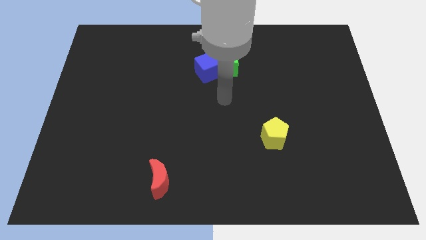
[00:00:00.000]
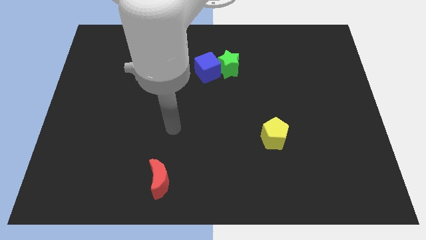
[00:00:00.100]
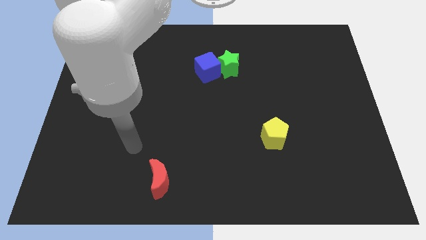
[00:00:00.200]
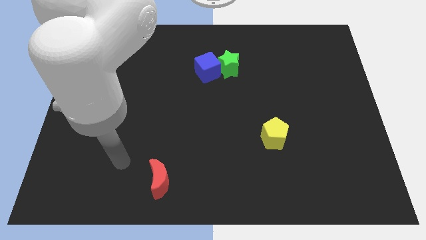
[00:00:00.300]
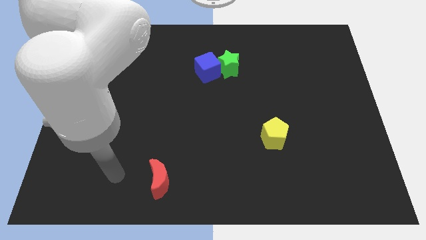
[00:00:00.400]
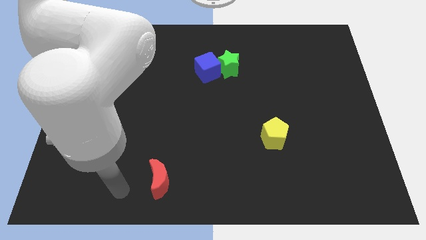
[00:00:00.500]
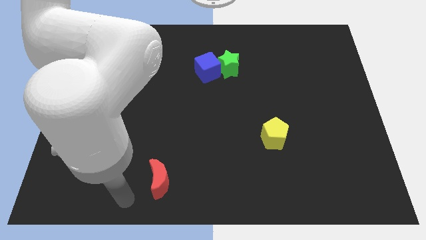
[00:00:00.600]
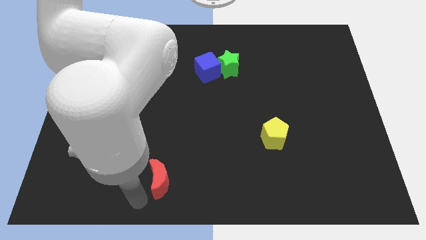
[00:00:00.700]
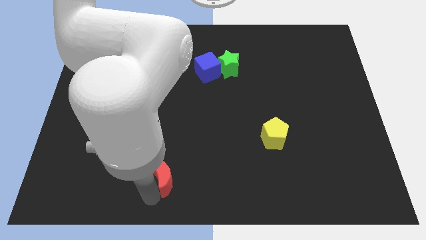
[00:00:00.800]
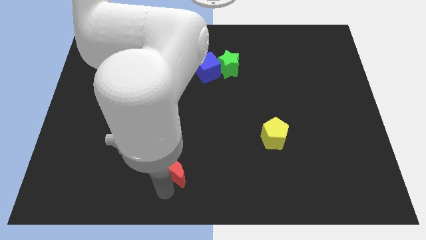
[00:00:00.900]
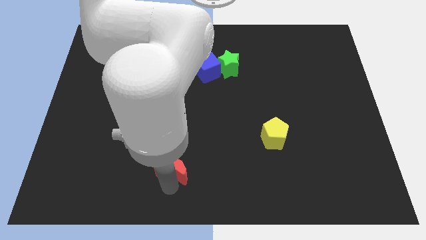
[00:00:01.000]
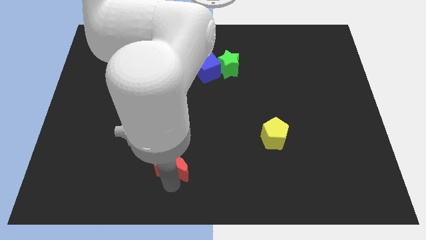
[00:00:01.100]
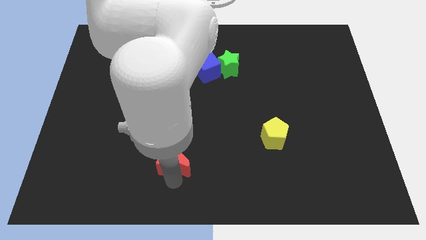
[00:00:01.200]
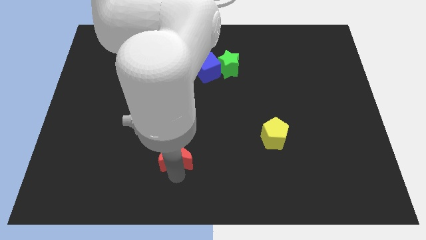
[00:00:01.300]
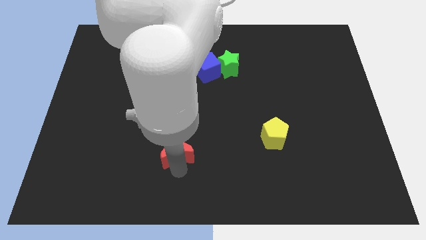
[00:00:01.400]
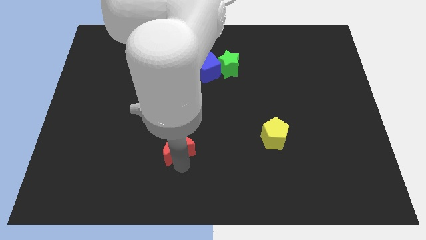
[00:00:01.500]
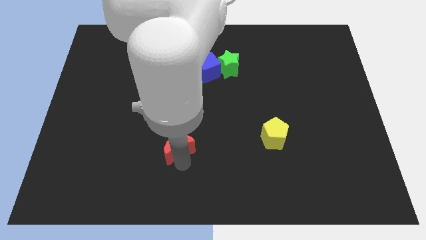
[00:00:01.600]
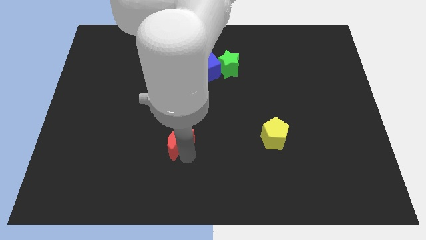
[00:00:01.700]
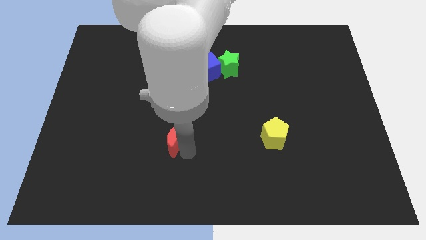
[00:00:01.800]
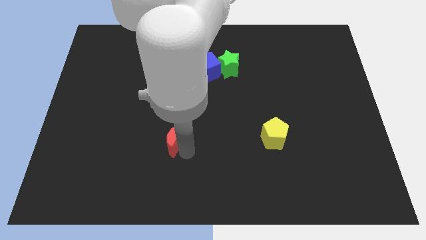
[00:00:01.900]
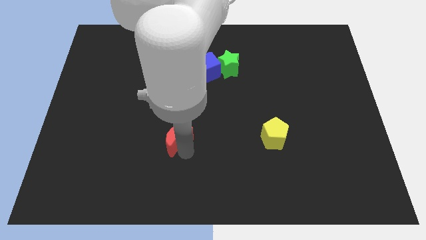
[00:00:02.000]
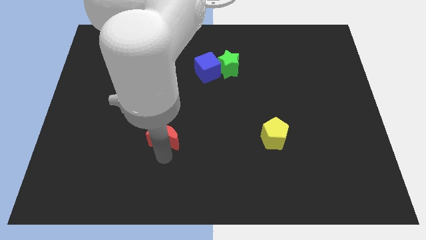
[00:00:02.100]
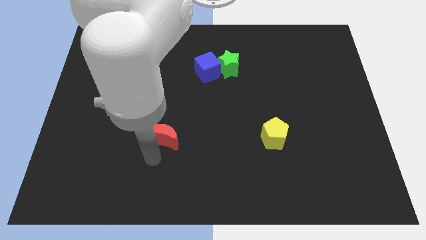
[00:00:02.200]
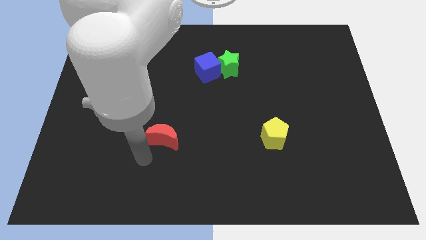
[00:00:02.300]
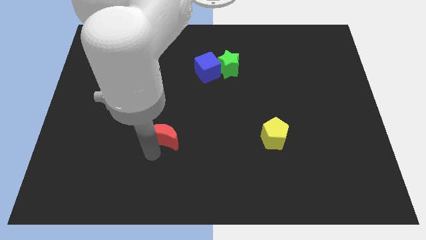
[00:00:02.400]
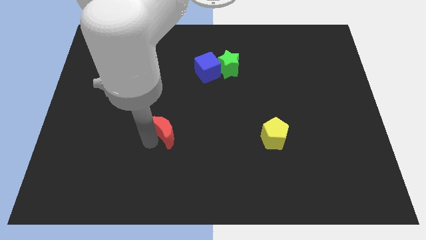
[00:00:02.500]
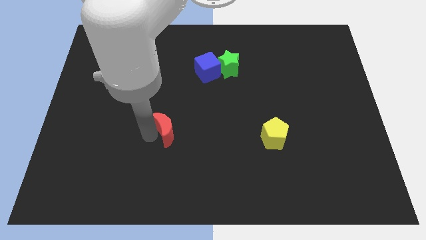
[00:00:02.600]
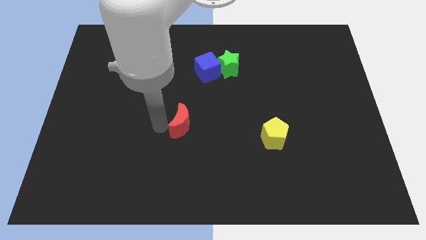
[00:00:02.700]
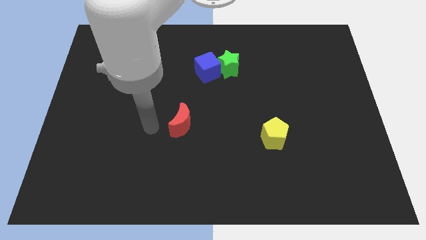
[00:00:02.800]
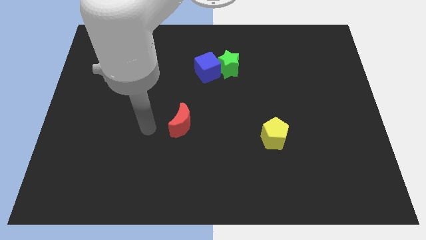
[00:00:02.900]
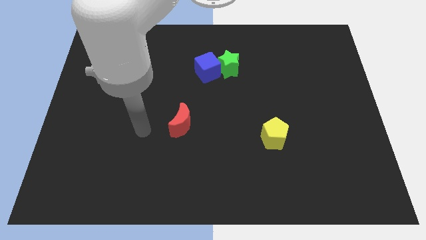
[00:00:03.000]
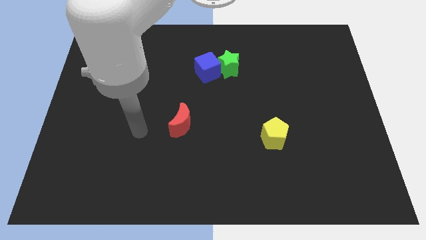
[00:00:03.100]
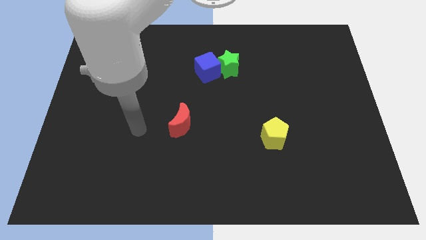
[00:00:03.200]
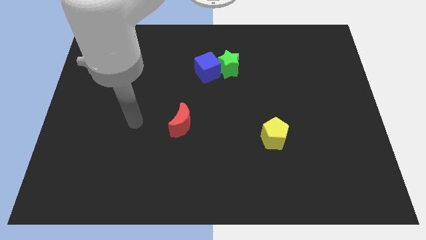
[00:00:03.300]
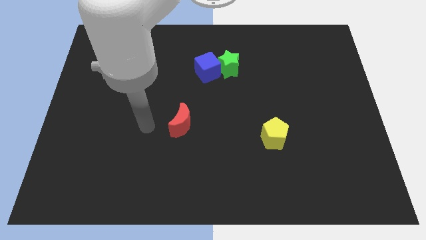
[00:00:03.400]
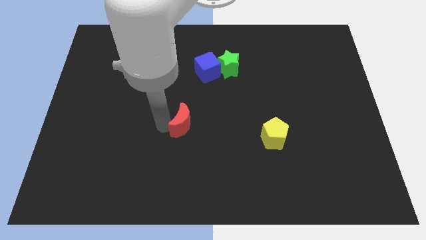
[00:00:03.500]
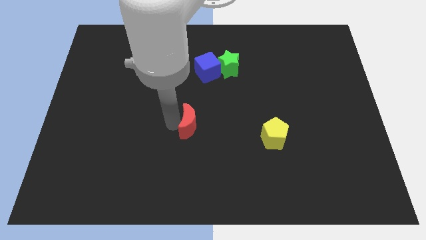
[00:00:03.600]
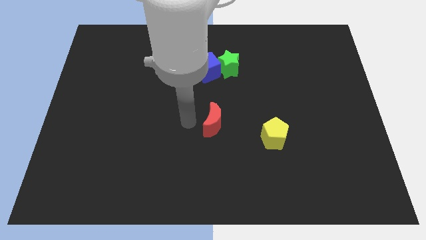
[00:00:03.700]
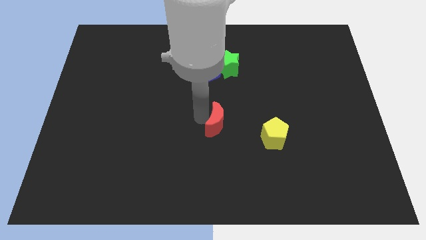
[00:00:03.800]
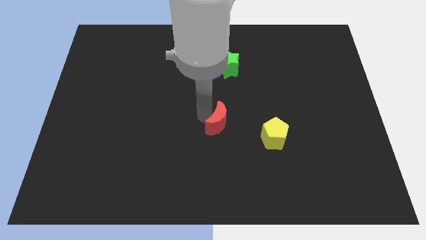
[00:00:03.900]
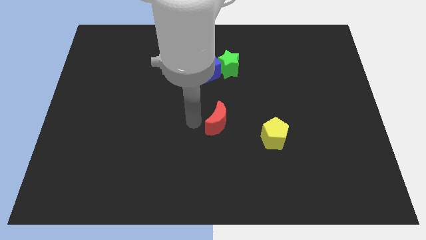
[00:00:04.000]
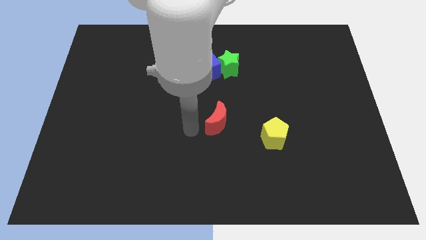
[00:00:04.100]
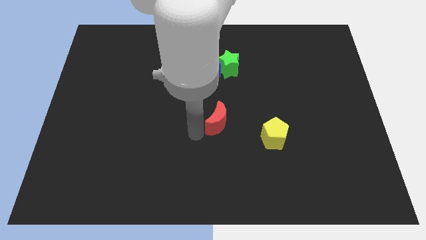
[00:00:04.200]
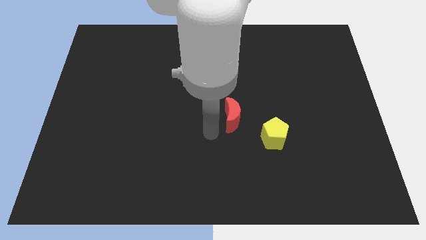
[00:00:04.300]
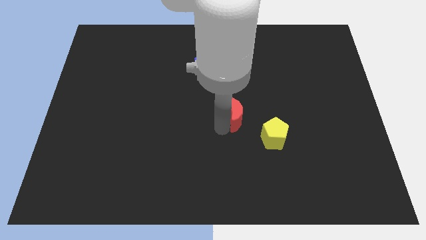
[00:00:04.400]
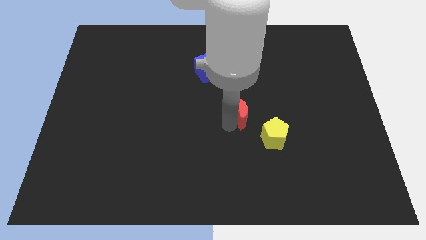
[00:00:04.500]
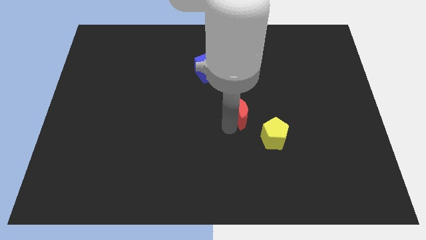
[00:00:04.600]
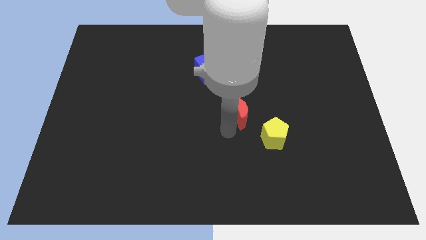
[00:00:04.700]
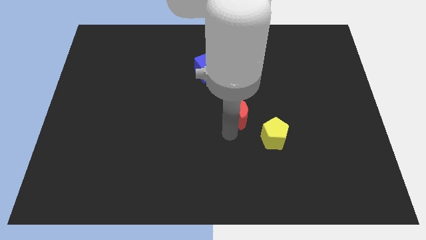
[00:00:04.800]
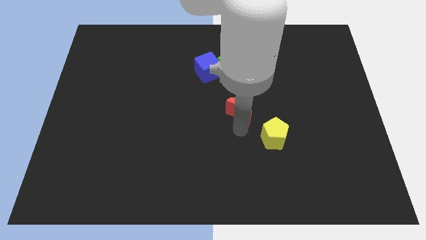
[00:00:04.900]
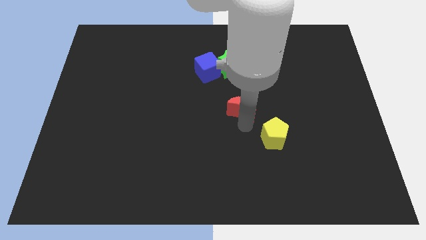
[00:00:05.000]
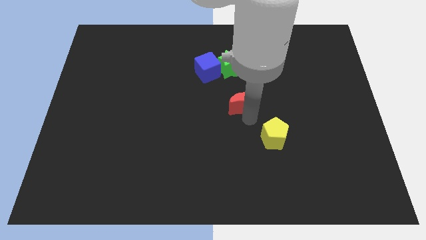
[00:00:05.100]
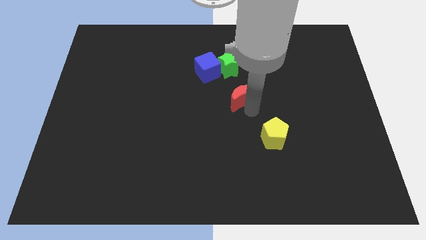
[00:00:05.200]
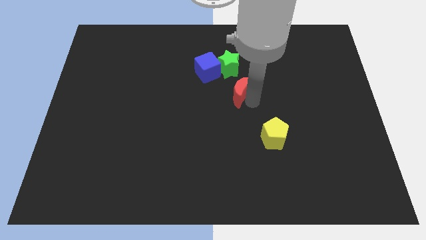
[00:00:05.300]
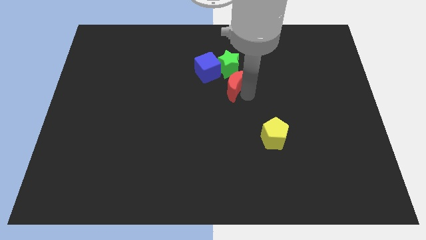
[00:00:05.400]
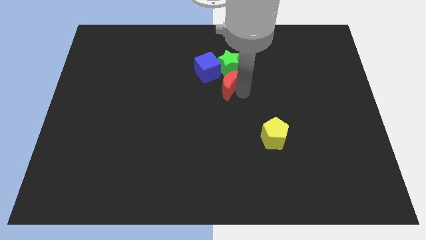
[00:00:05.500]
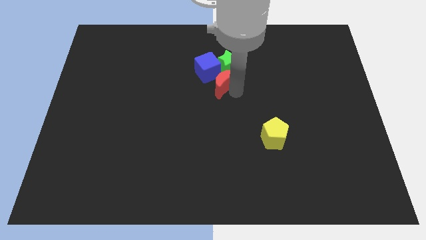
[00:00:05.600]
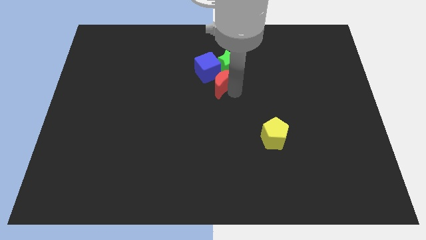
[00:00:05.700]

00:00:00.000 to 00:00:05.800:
push the moon towards the star

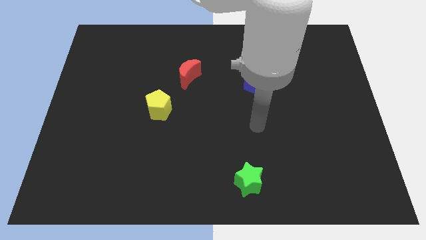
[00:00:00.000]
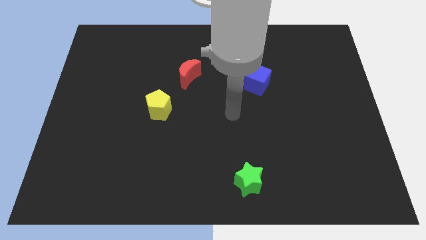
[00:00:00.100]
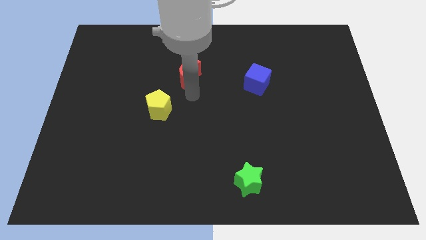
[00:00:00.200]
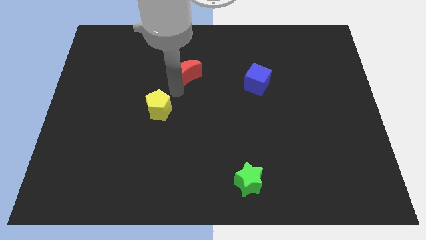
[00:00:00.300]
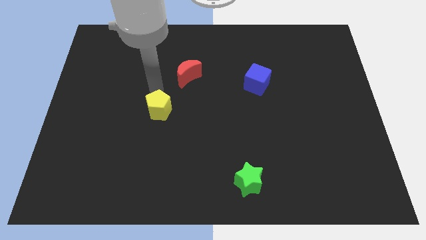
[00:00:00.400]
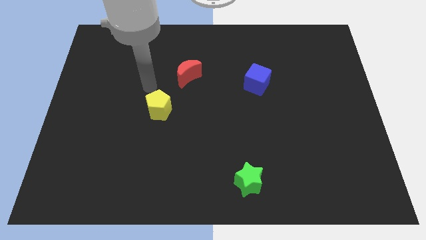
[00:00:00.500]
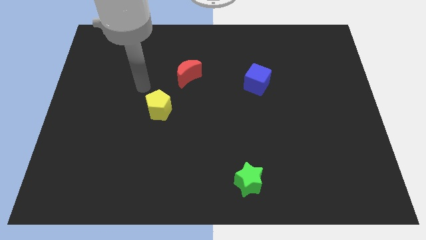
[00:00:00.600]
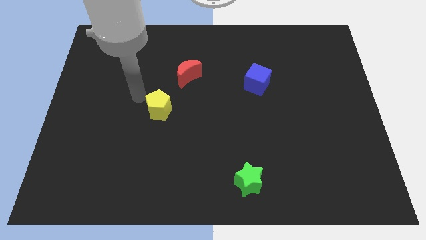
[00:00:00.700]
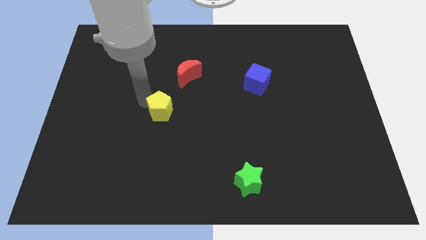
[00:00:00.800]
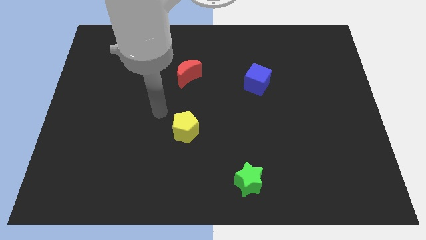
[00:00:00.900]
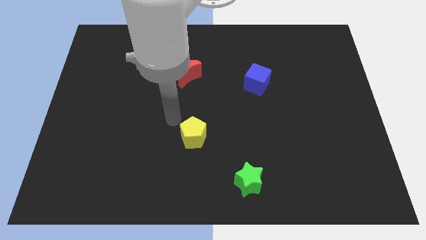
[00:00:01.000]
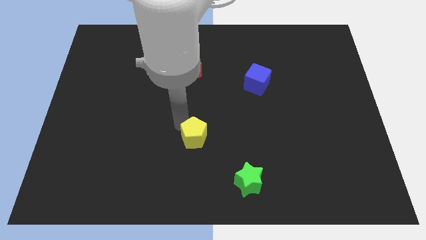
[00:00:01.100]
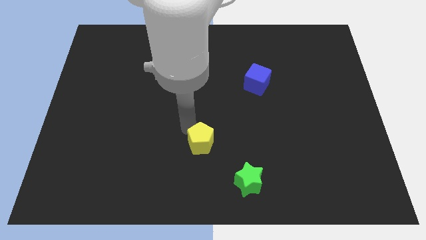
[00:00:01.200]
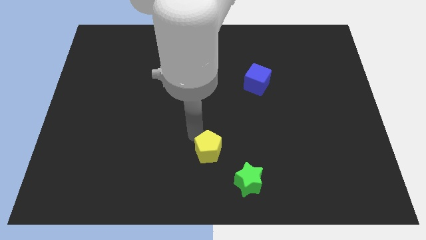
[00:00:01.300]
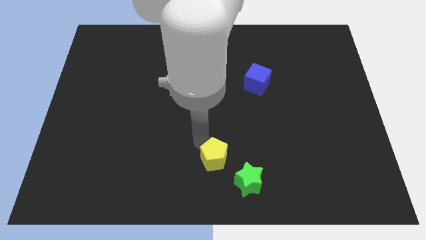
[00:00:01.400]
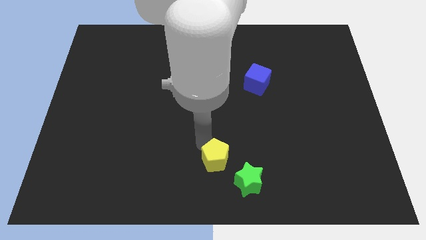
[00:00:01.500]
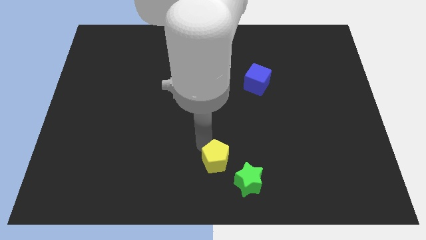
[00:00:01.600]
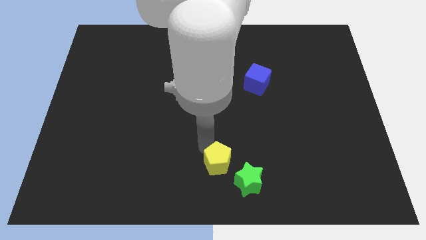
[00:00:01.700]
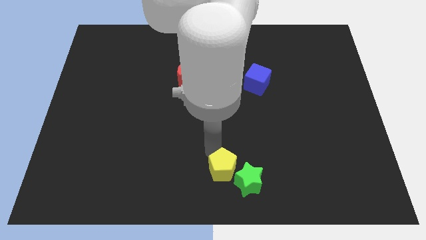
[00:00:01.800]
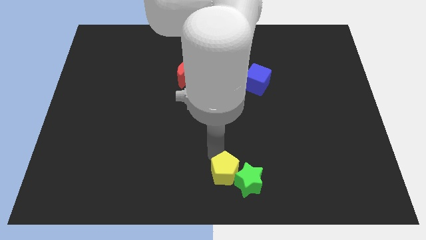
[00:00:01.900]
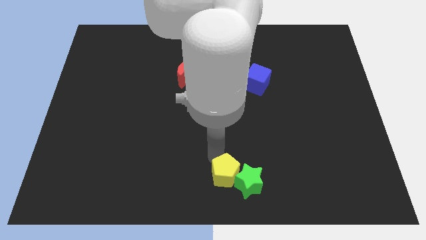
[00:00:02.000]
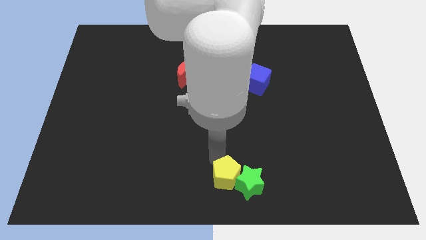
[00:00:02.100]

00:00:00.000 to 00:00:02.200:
put the pentagon close to the green block

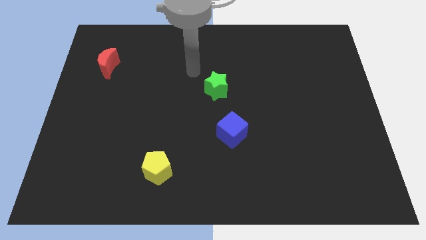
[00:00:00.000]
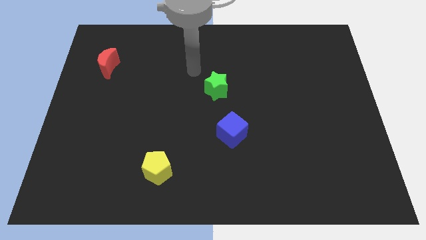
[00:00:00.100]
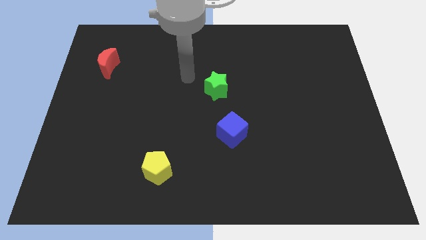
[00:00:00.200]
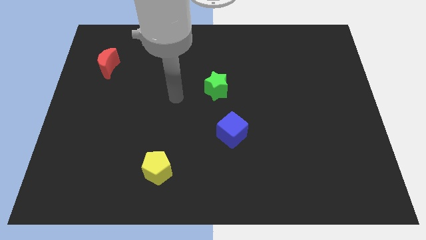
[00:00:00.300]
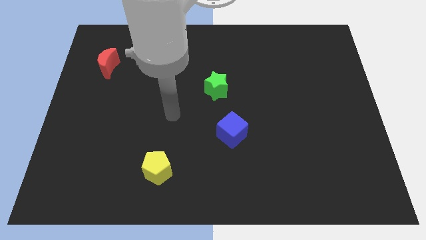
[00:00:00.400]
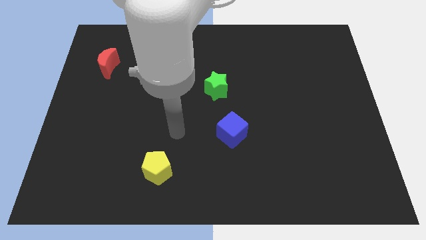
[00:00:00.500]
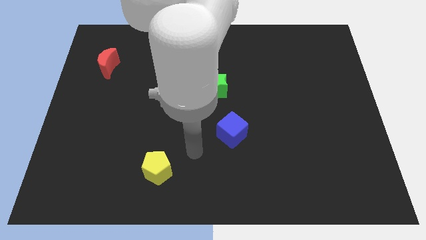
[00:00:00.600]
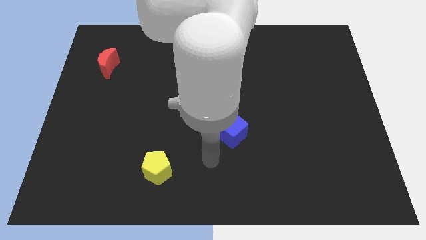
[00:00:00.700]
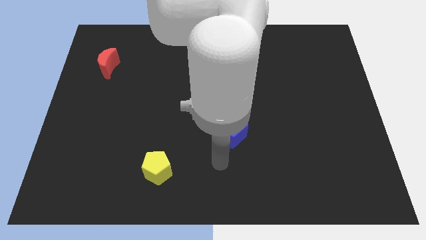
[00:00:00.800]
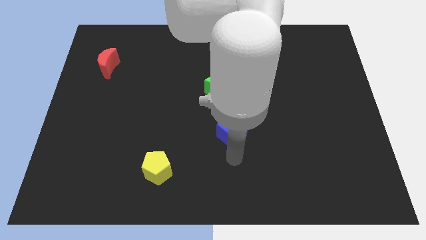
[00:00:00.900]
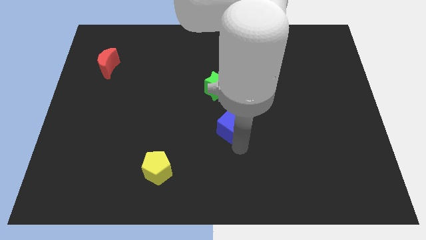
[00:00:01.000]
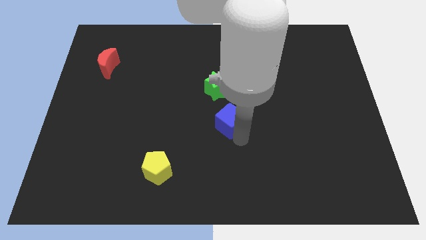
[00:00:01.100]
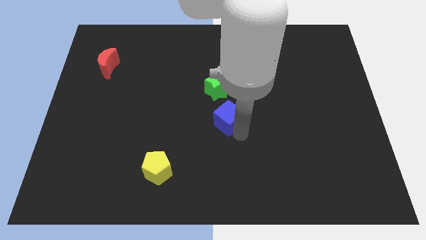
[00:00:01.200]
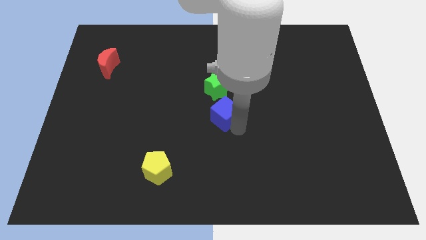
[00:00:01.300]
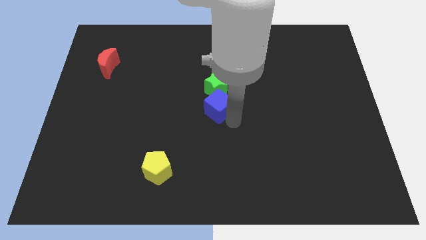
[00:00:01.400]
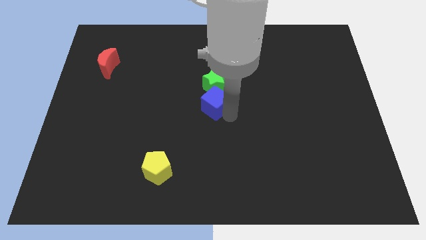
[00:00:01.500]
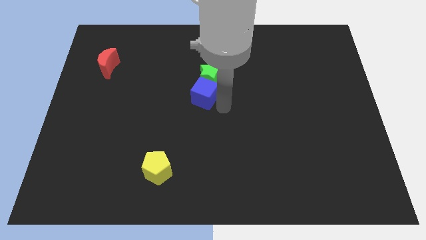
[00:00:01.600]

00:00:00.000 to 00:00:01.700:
slide the cube next to the green star
